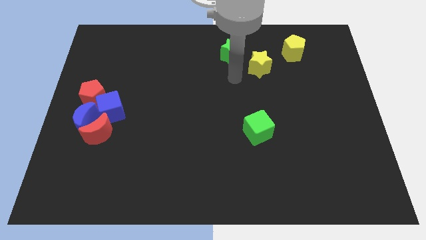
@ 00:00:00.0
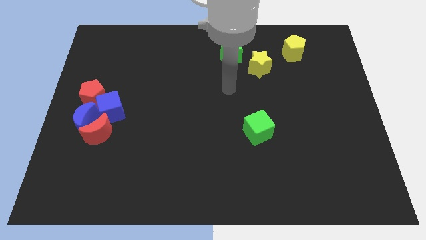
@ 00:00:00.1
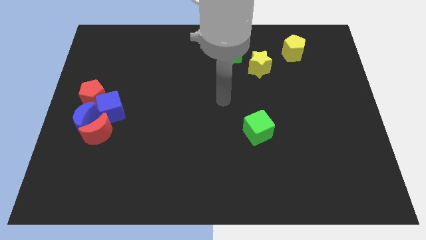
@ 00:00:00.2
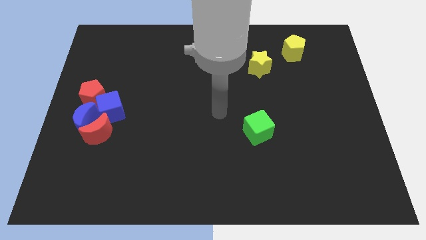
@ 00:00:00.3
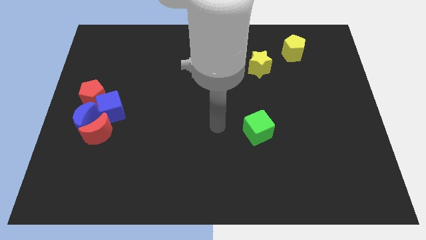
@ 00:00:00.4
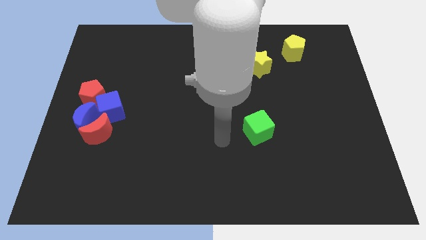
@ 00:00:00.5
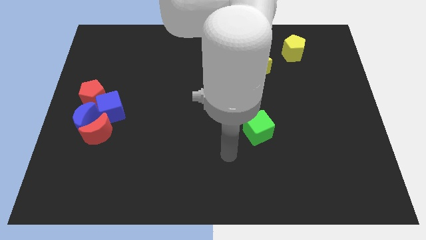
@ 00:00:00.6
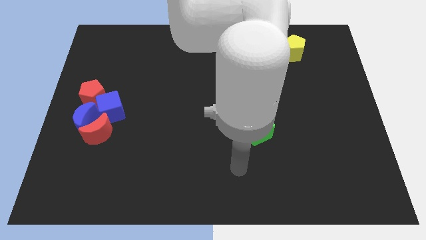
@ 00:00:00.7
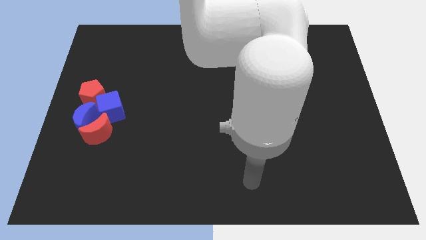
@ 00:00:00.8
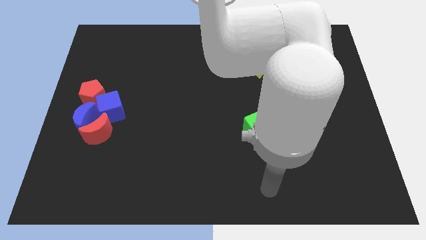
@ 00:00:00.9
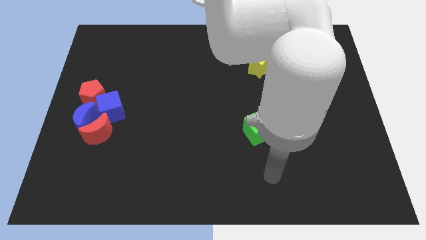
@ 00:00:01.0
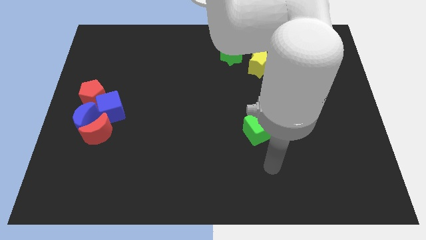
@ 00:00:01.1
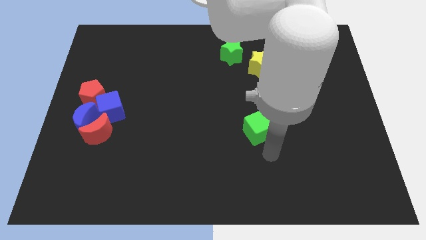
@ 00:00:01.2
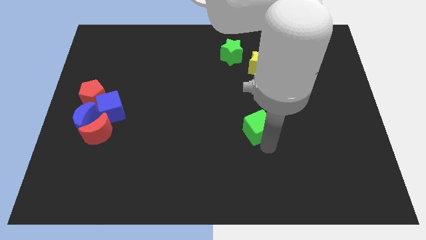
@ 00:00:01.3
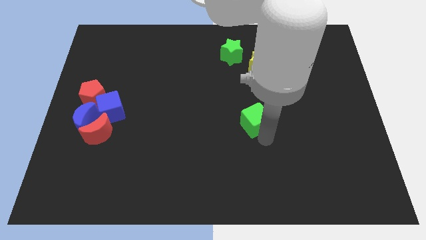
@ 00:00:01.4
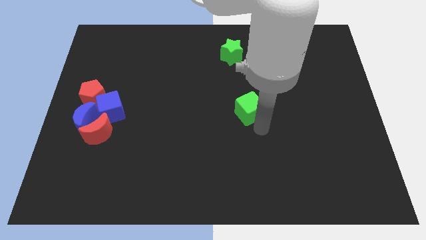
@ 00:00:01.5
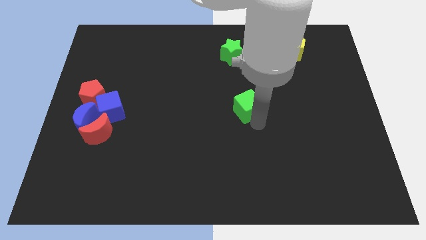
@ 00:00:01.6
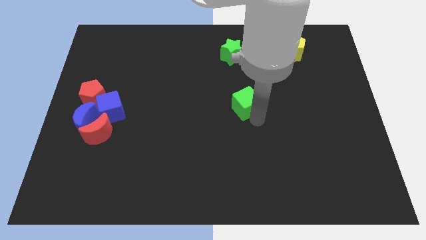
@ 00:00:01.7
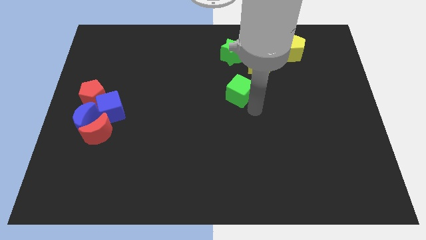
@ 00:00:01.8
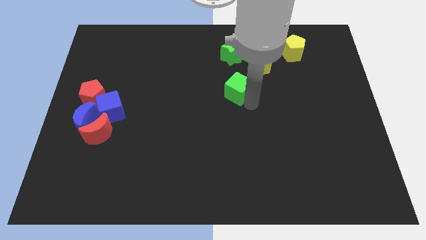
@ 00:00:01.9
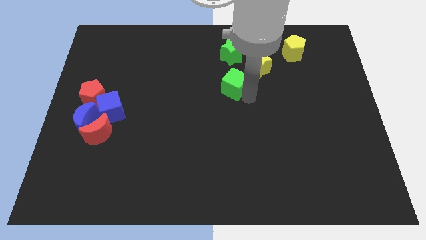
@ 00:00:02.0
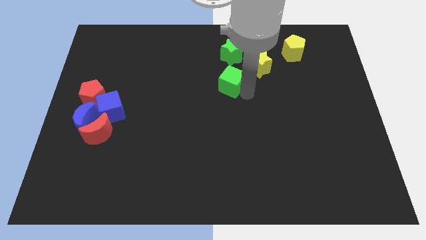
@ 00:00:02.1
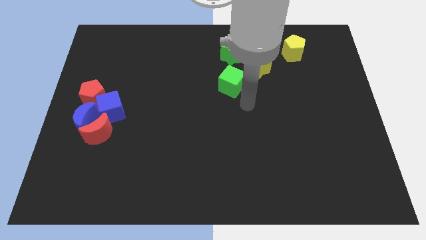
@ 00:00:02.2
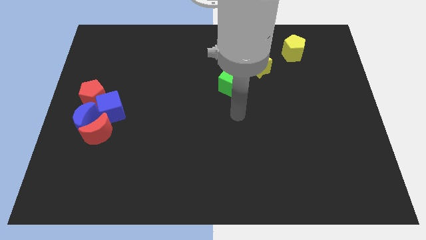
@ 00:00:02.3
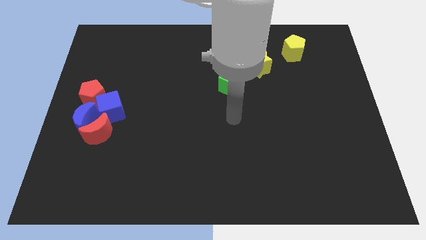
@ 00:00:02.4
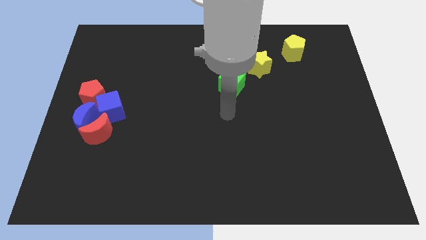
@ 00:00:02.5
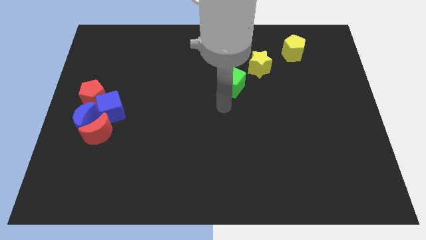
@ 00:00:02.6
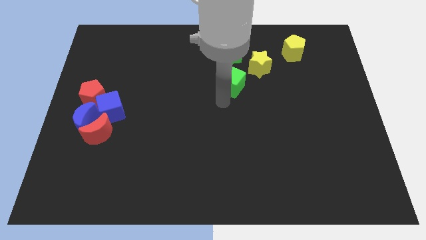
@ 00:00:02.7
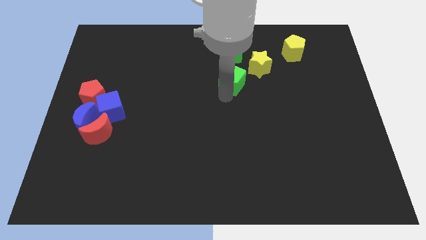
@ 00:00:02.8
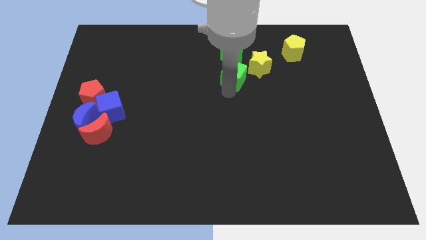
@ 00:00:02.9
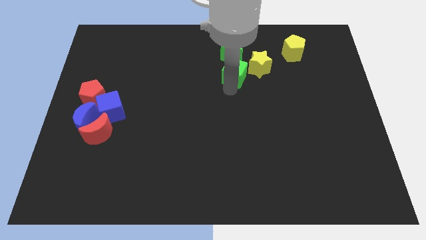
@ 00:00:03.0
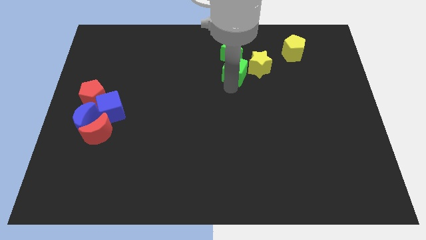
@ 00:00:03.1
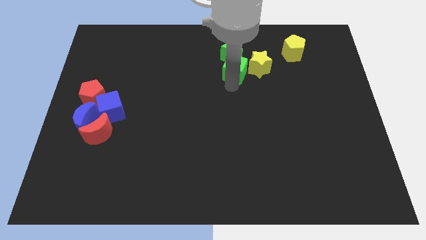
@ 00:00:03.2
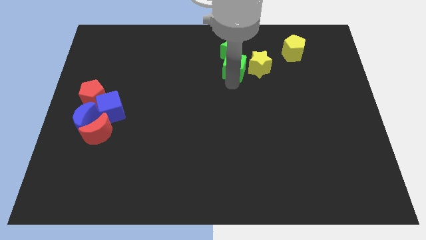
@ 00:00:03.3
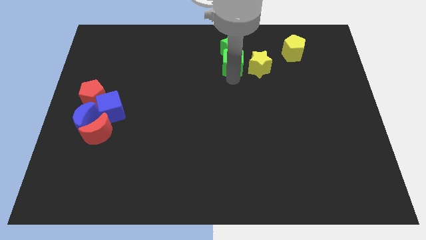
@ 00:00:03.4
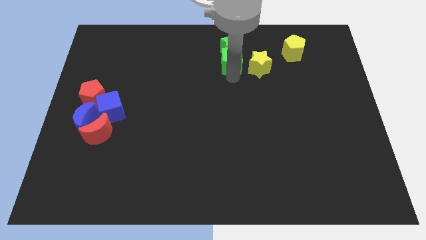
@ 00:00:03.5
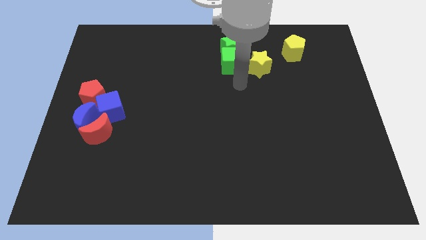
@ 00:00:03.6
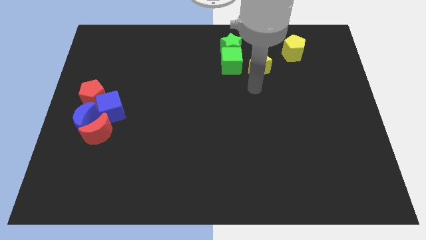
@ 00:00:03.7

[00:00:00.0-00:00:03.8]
slide the green cube into the green star

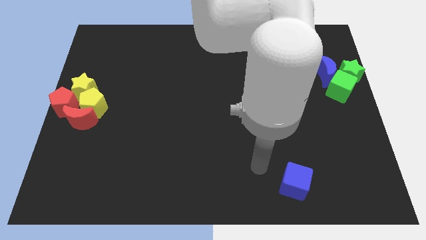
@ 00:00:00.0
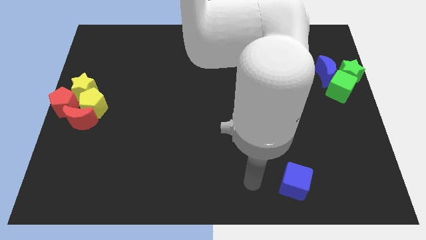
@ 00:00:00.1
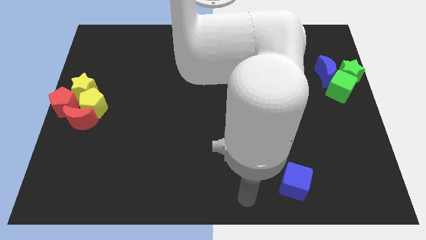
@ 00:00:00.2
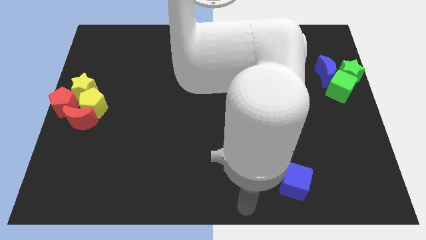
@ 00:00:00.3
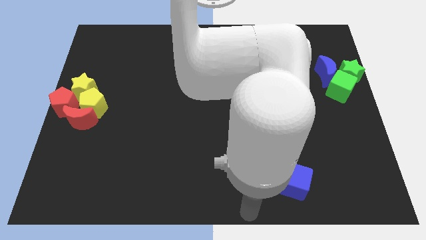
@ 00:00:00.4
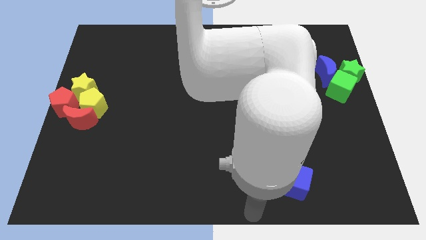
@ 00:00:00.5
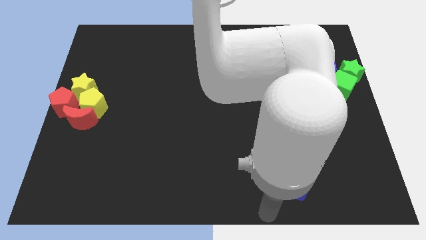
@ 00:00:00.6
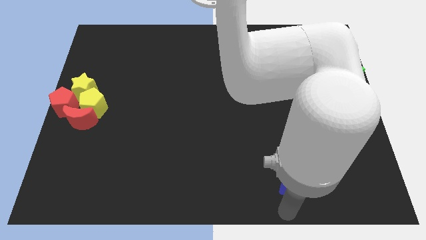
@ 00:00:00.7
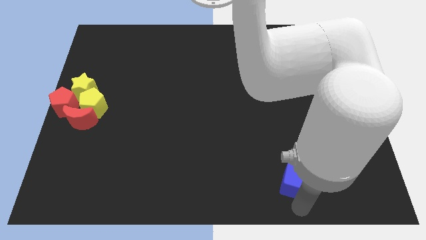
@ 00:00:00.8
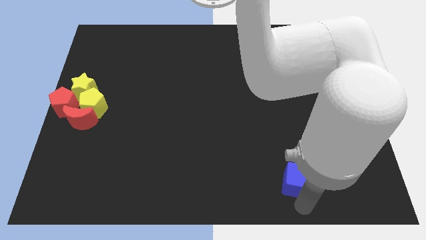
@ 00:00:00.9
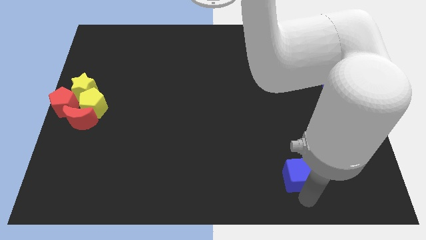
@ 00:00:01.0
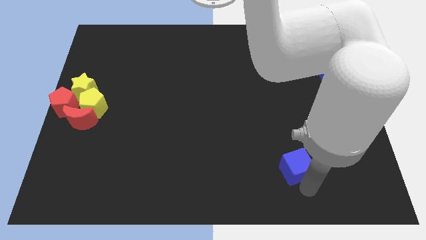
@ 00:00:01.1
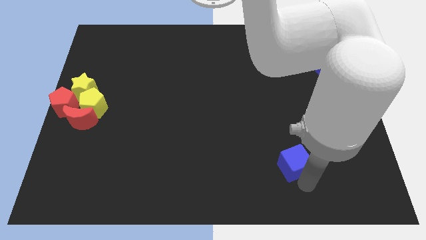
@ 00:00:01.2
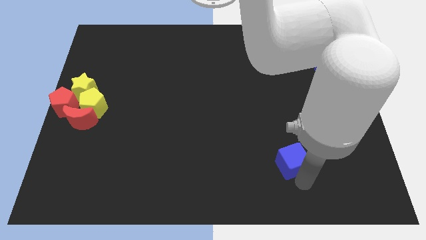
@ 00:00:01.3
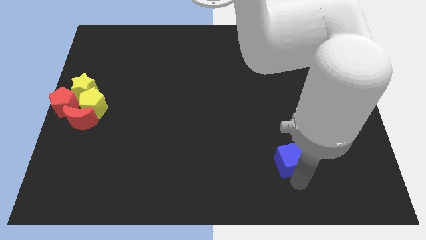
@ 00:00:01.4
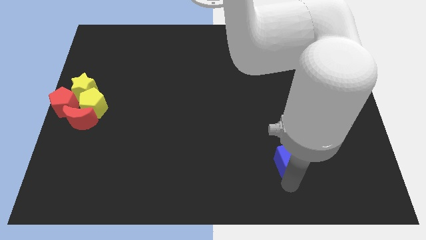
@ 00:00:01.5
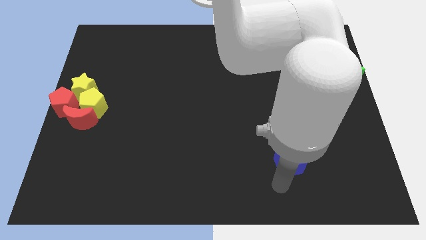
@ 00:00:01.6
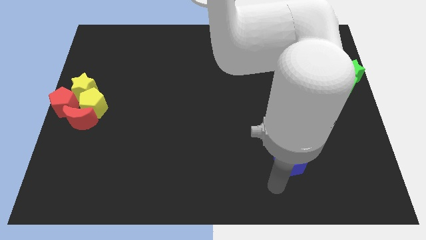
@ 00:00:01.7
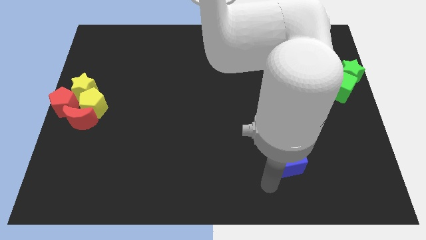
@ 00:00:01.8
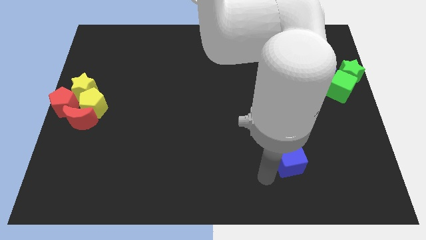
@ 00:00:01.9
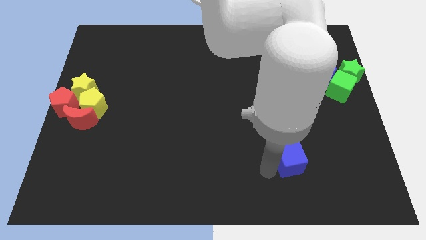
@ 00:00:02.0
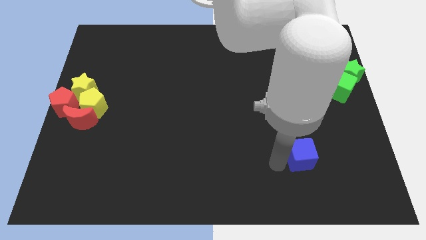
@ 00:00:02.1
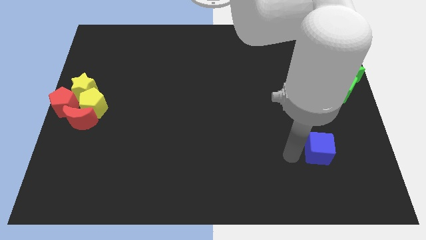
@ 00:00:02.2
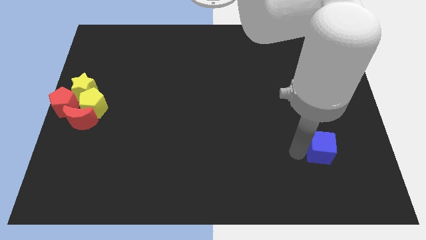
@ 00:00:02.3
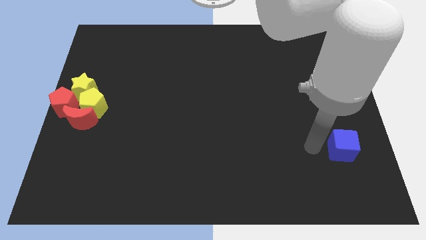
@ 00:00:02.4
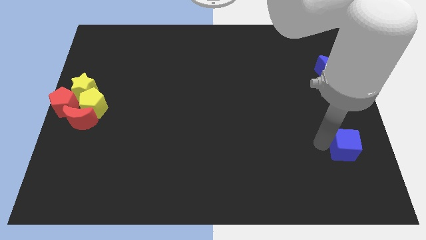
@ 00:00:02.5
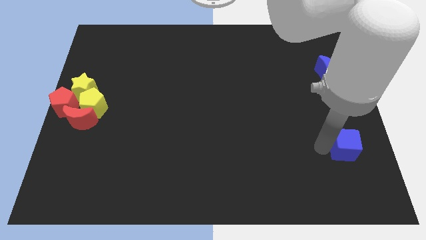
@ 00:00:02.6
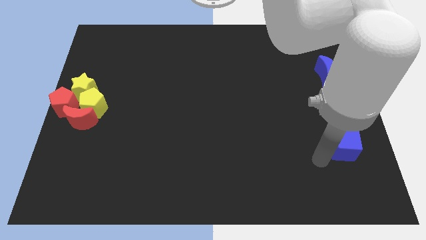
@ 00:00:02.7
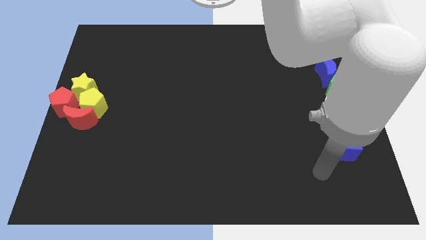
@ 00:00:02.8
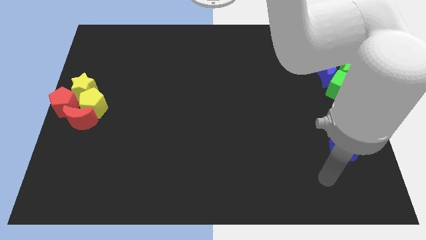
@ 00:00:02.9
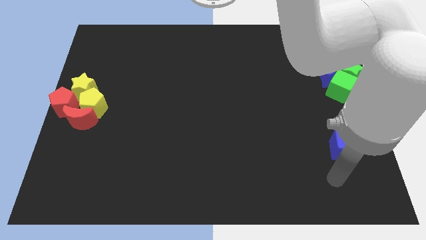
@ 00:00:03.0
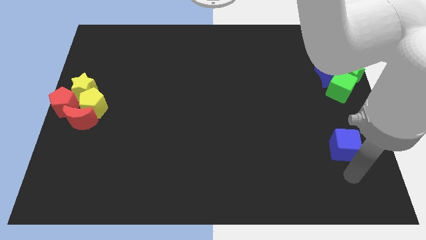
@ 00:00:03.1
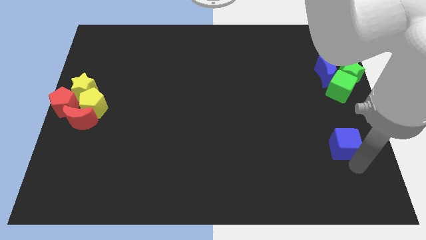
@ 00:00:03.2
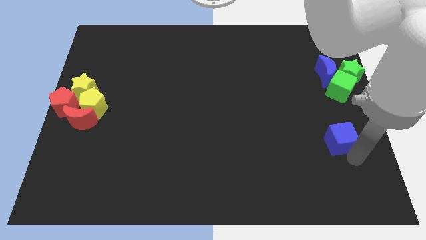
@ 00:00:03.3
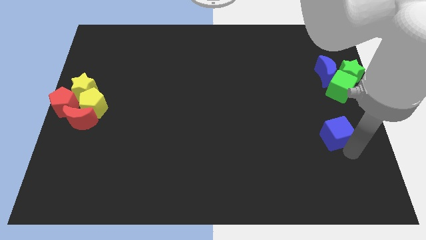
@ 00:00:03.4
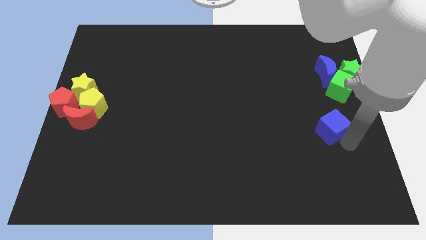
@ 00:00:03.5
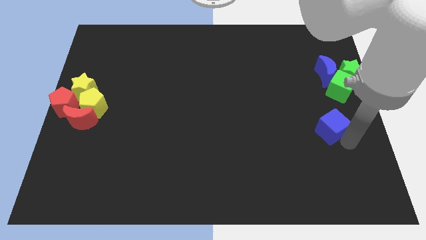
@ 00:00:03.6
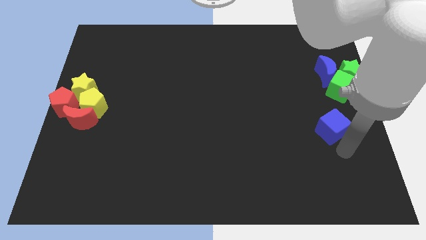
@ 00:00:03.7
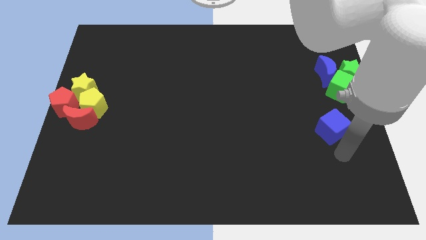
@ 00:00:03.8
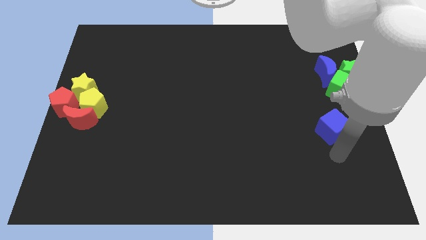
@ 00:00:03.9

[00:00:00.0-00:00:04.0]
drag the blue cube towards the green cube

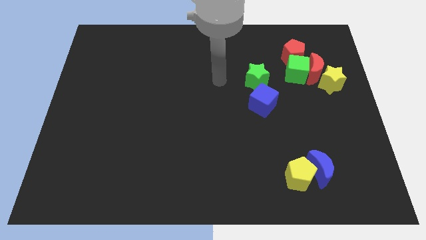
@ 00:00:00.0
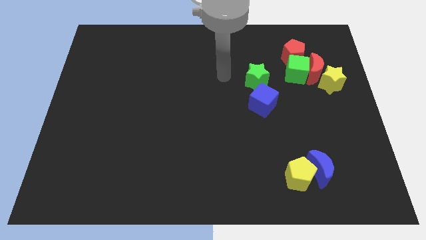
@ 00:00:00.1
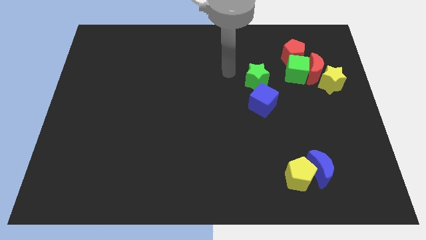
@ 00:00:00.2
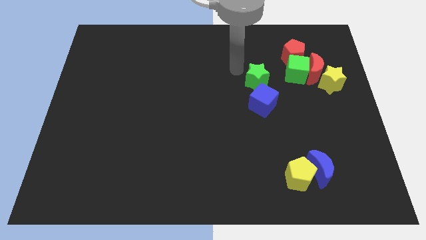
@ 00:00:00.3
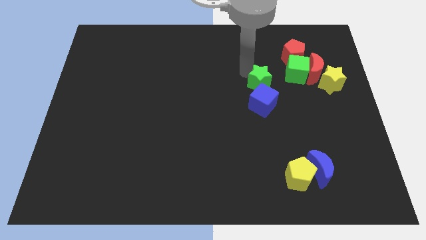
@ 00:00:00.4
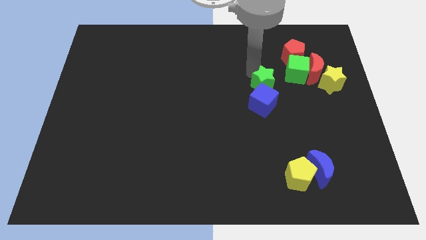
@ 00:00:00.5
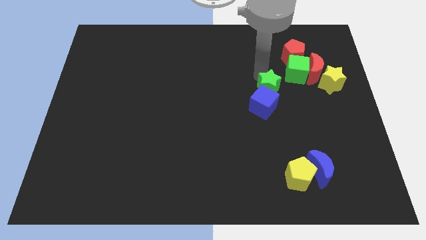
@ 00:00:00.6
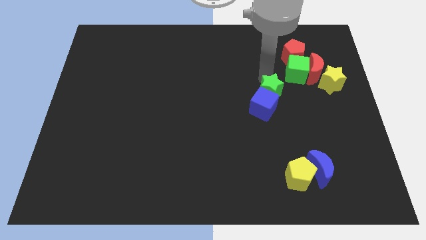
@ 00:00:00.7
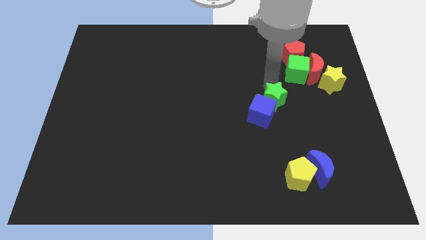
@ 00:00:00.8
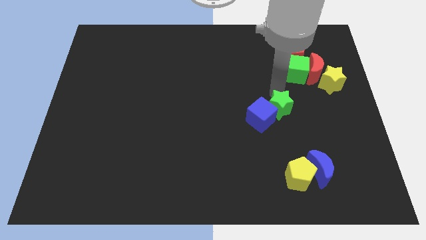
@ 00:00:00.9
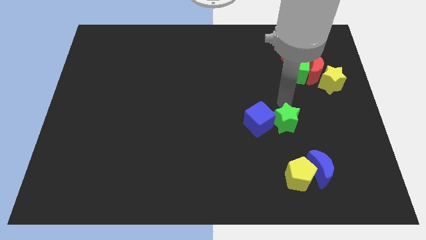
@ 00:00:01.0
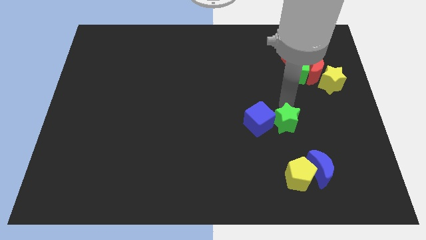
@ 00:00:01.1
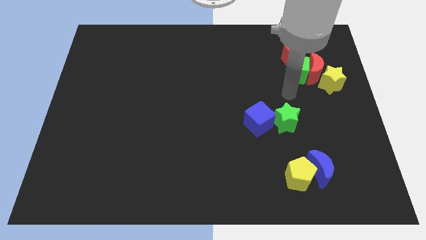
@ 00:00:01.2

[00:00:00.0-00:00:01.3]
move the green star to the right of the blue cube
